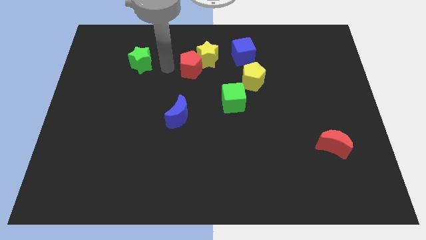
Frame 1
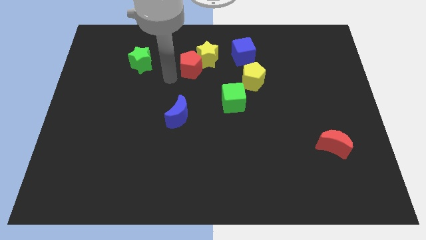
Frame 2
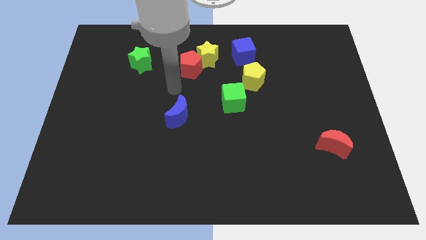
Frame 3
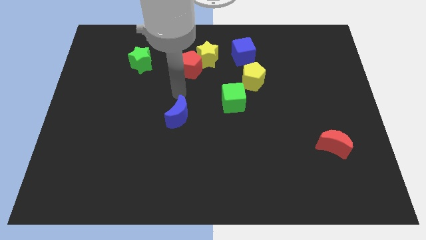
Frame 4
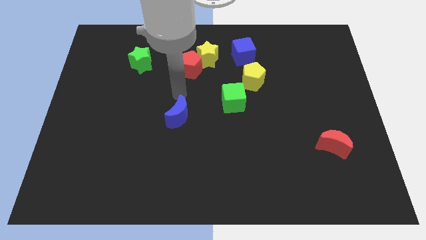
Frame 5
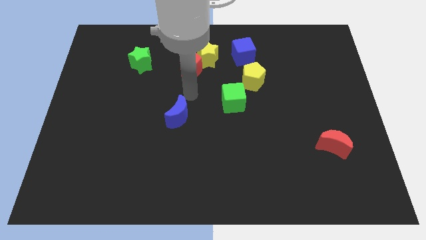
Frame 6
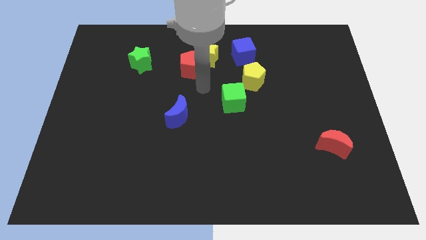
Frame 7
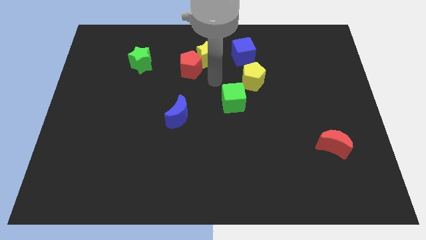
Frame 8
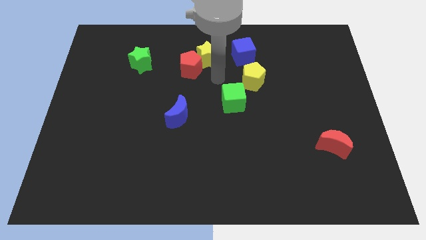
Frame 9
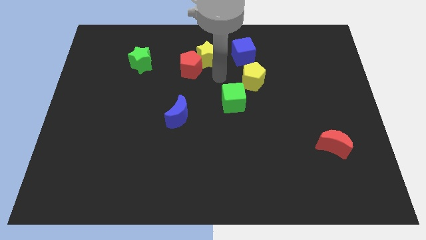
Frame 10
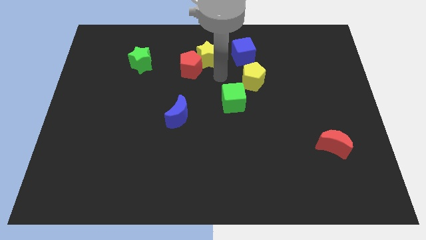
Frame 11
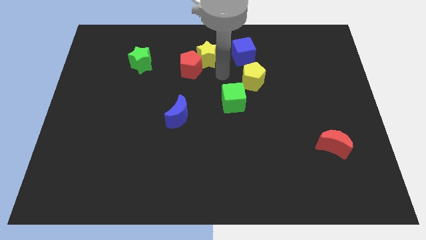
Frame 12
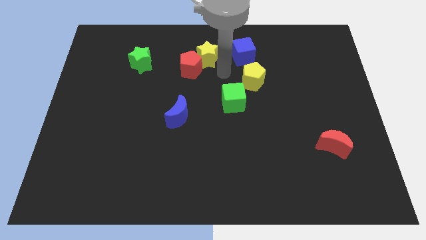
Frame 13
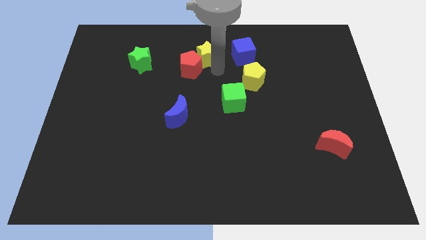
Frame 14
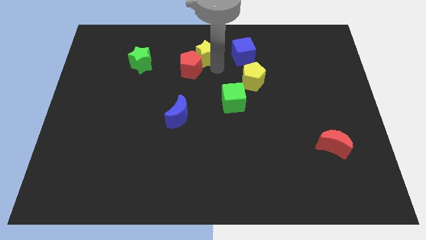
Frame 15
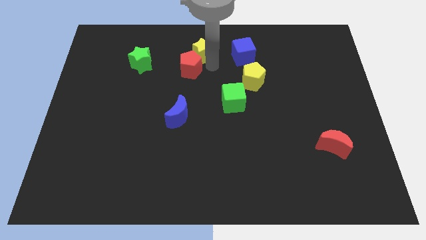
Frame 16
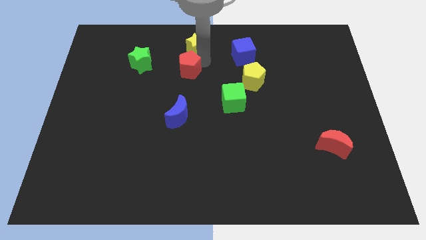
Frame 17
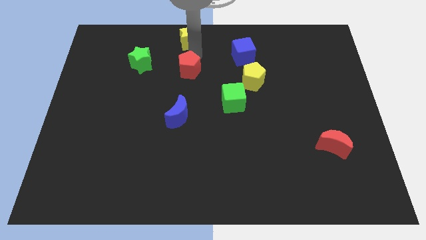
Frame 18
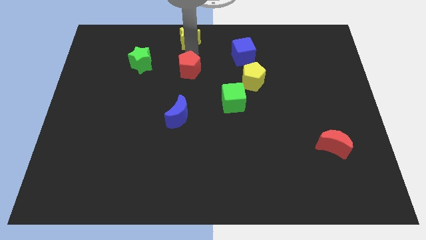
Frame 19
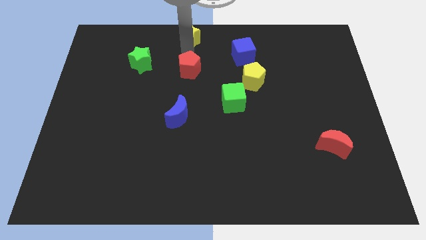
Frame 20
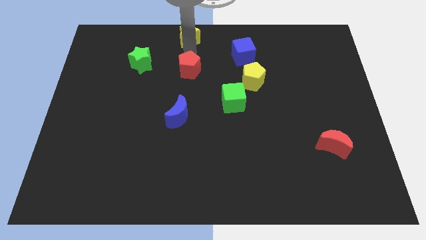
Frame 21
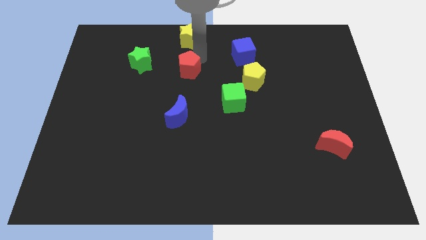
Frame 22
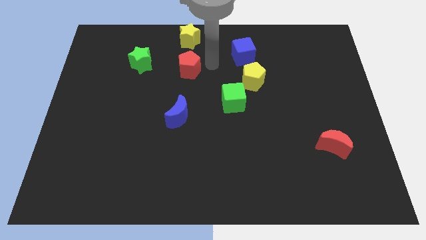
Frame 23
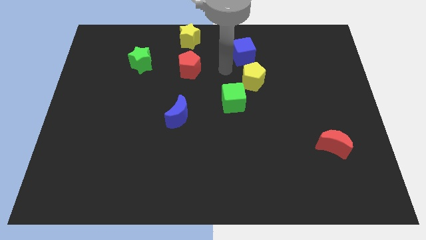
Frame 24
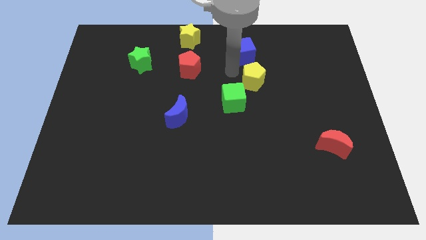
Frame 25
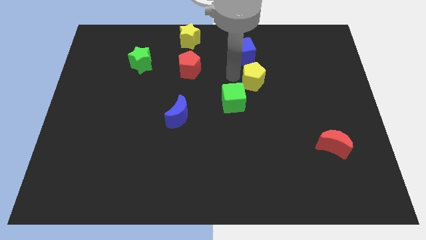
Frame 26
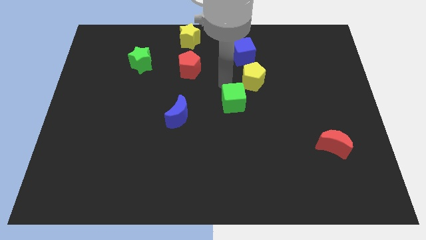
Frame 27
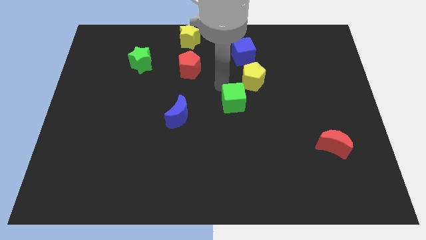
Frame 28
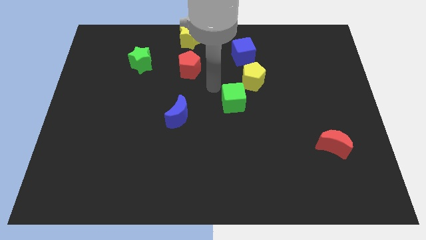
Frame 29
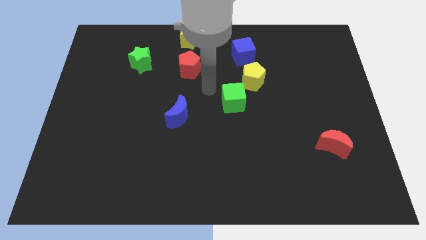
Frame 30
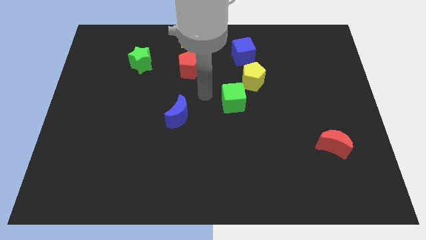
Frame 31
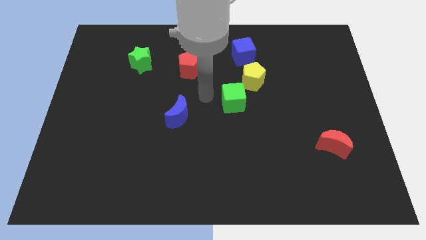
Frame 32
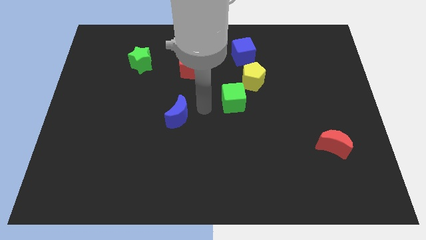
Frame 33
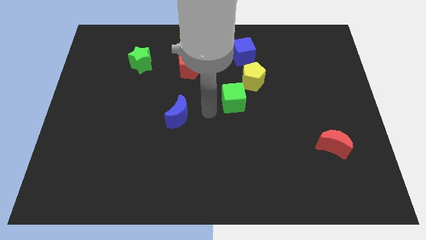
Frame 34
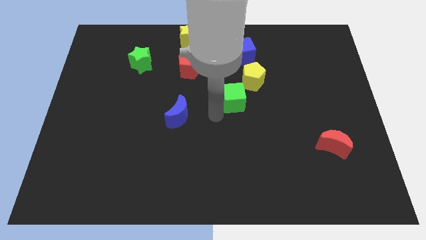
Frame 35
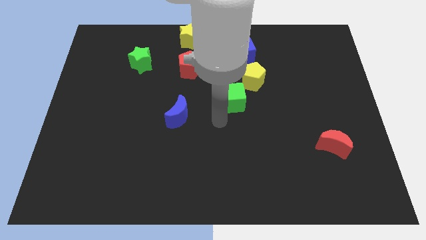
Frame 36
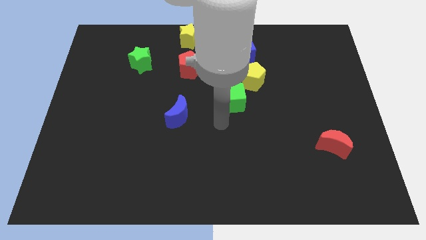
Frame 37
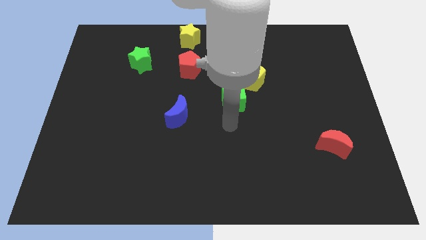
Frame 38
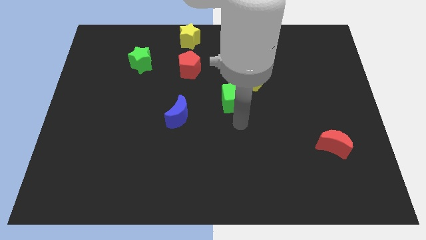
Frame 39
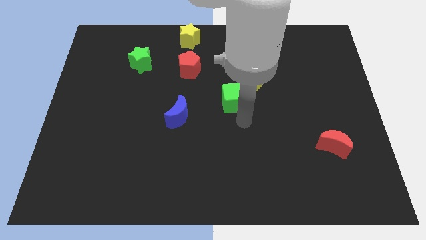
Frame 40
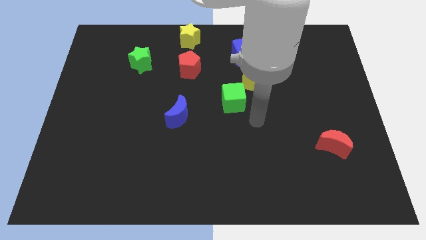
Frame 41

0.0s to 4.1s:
move the yellow star to the top of the red pentagon

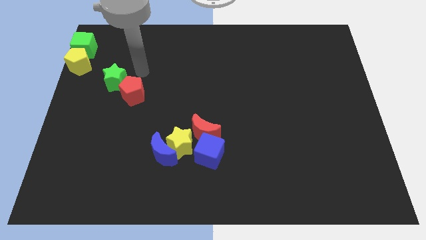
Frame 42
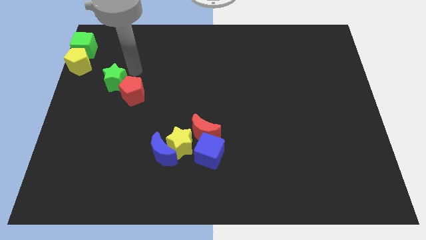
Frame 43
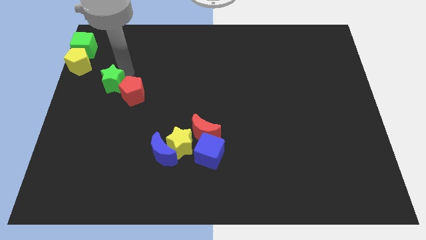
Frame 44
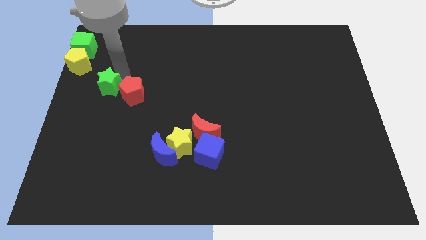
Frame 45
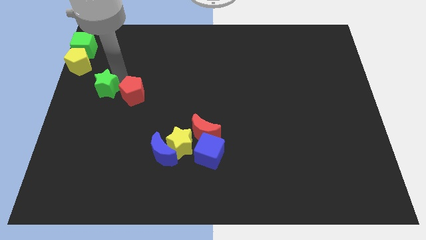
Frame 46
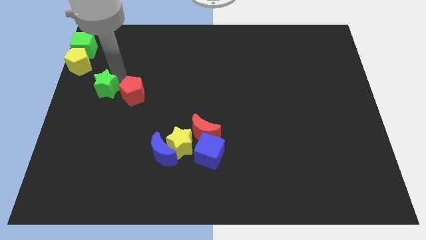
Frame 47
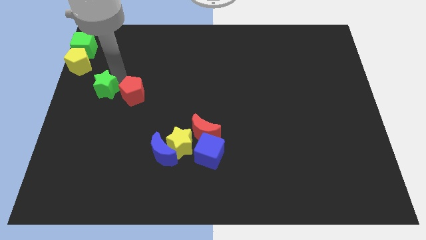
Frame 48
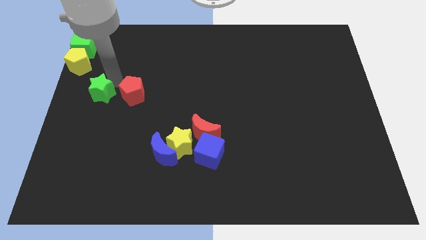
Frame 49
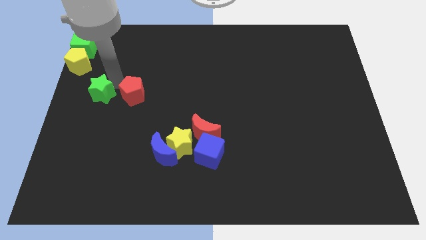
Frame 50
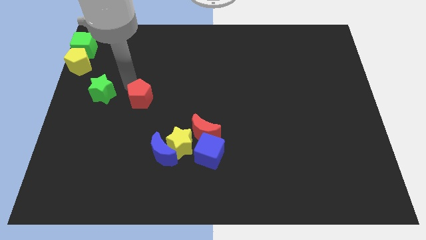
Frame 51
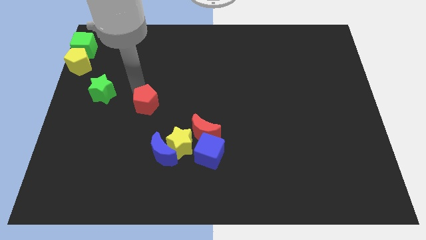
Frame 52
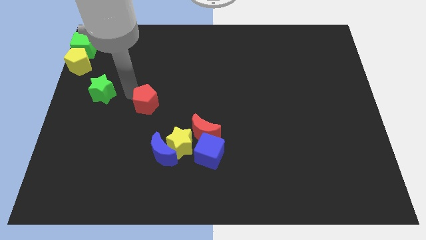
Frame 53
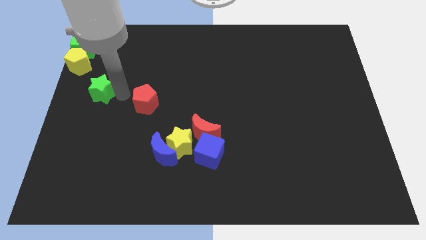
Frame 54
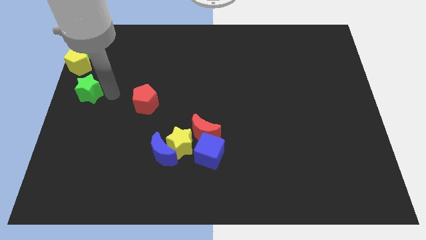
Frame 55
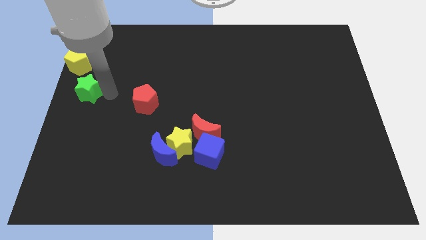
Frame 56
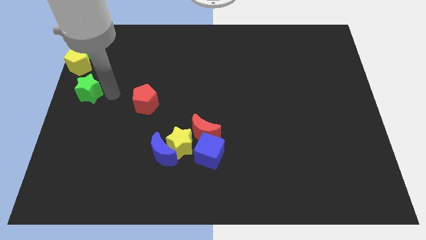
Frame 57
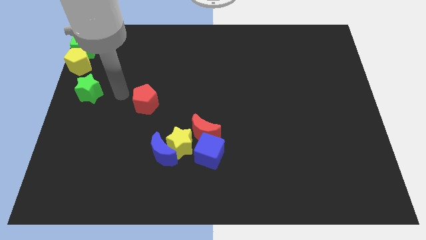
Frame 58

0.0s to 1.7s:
separate the green star from the red pentagon

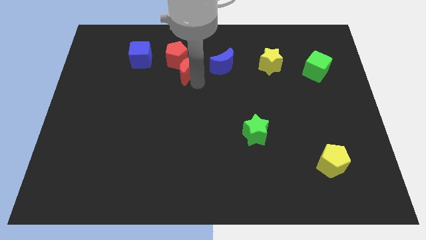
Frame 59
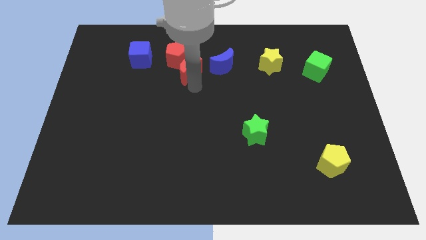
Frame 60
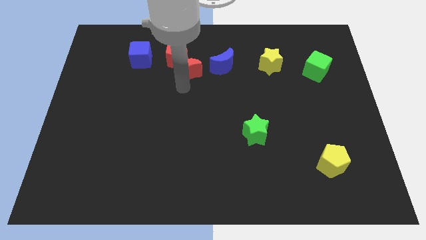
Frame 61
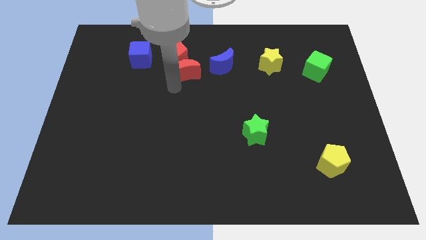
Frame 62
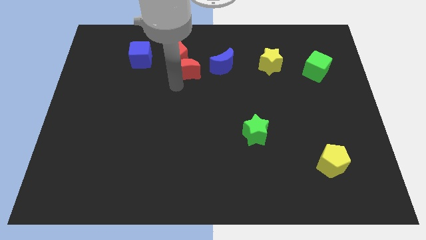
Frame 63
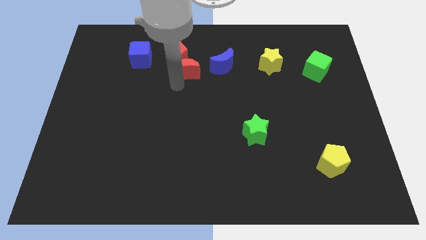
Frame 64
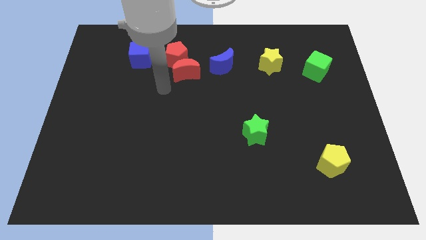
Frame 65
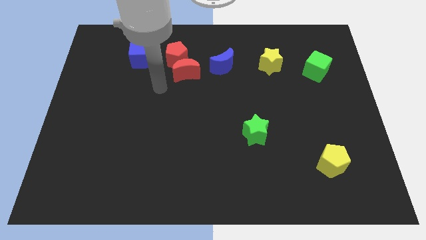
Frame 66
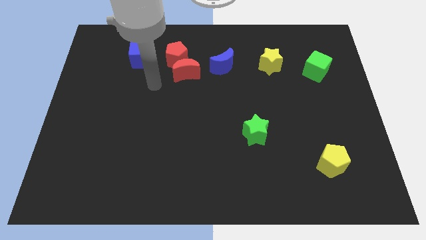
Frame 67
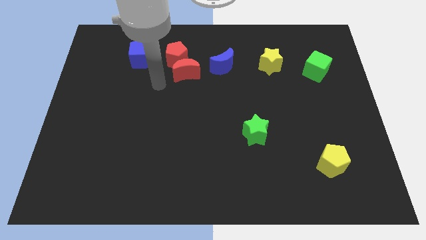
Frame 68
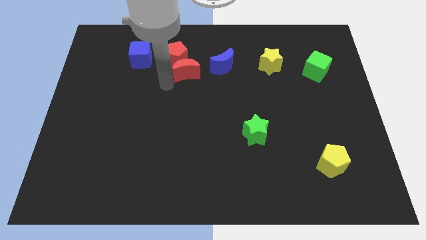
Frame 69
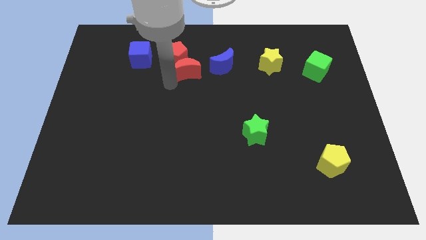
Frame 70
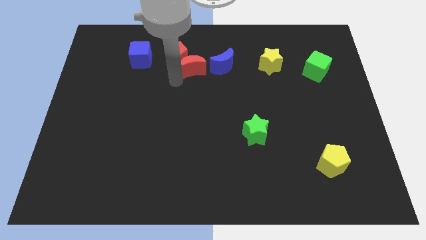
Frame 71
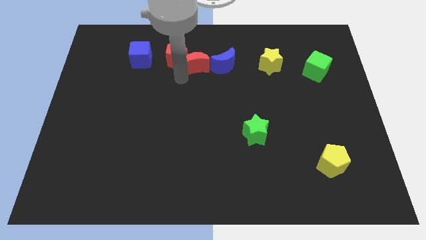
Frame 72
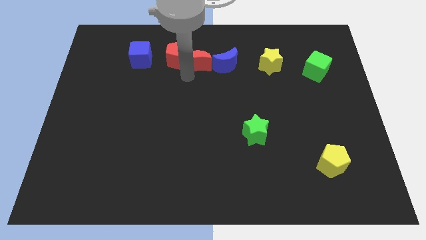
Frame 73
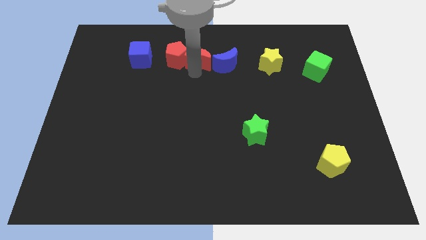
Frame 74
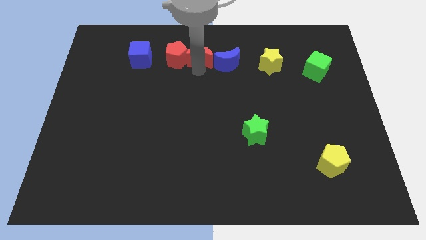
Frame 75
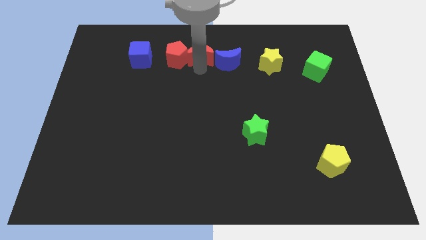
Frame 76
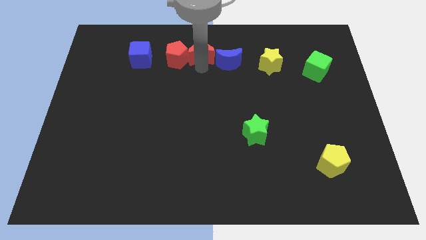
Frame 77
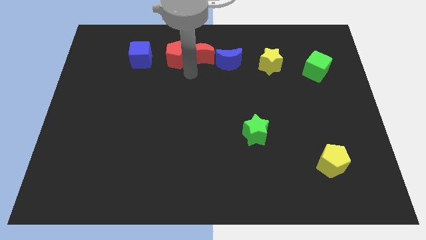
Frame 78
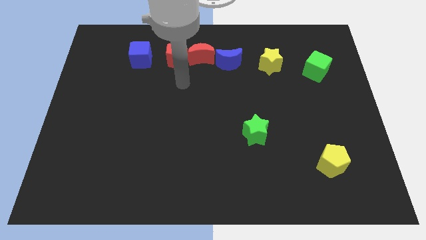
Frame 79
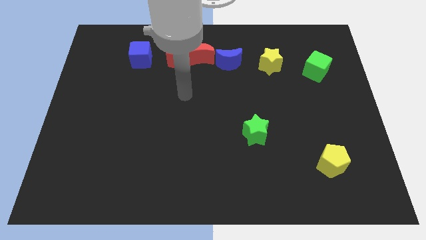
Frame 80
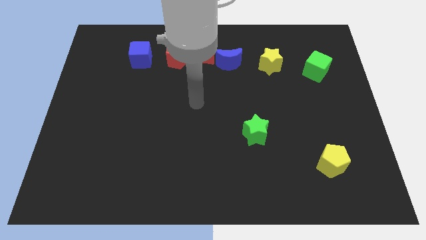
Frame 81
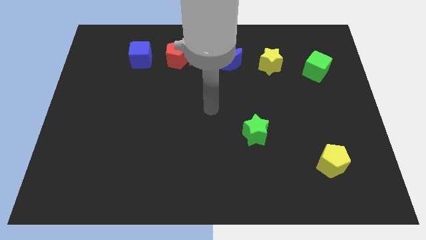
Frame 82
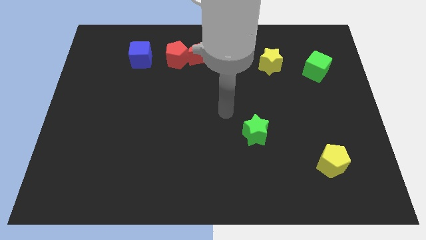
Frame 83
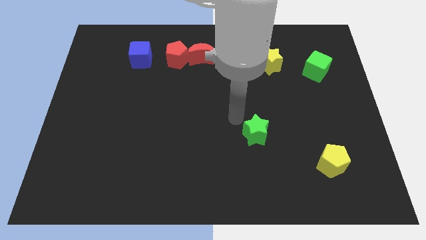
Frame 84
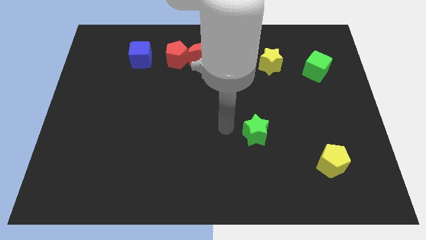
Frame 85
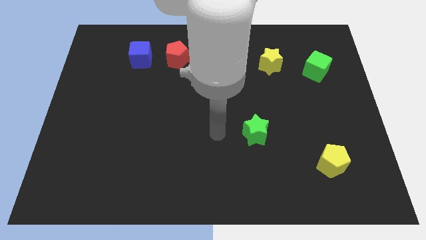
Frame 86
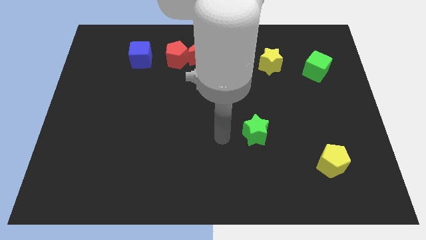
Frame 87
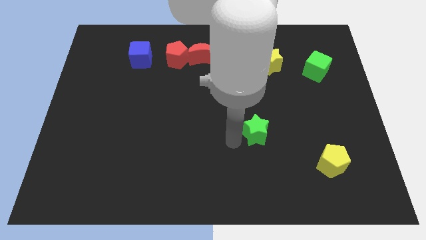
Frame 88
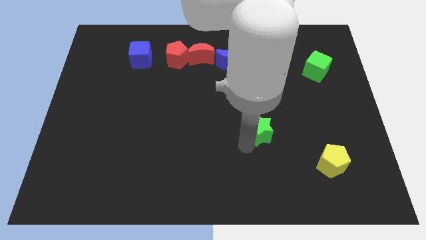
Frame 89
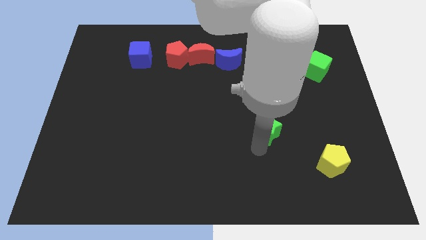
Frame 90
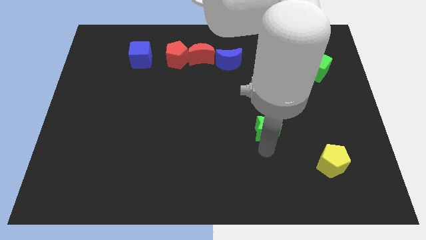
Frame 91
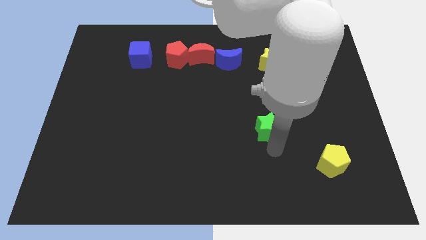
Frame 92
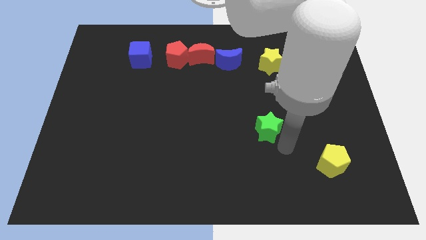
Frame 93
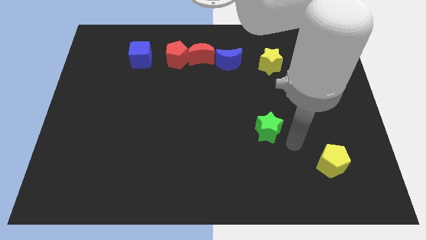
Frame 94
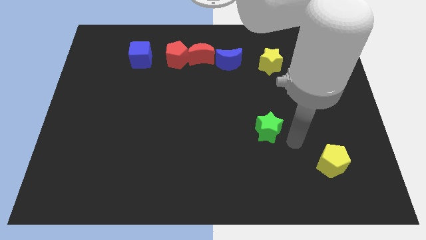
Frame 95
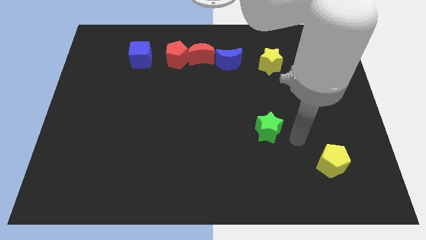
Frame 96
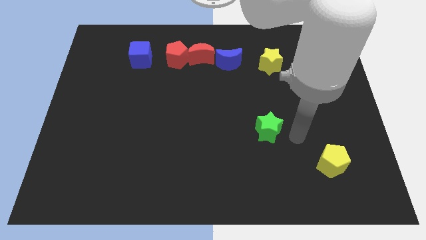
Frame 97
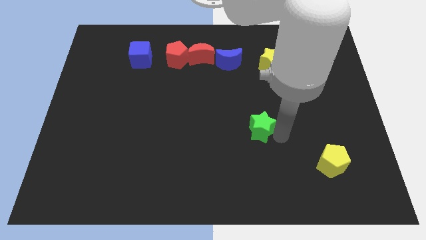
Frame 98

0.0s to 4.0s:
move the arm towards the green star
